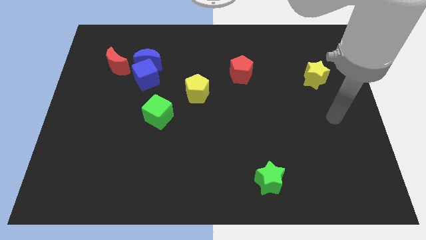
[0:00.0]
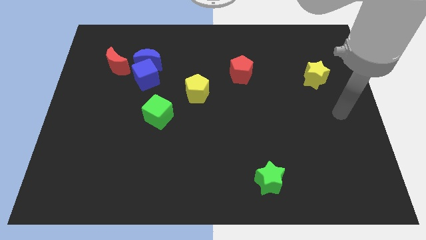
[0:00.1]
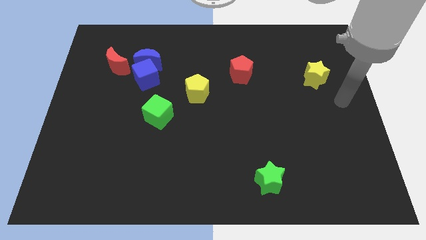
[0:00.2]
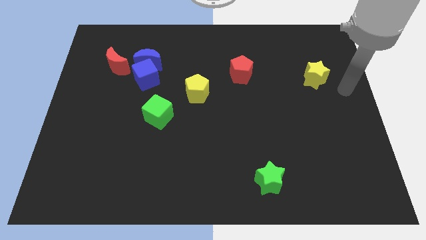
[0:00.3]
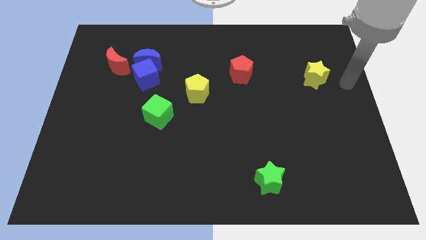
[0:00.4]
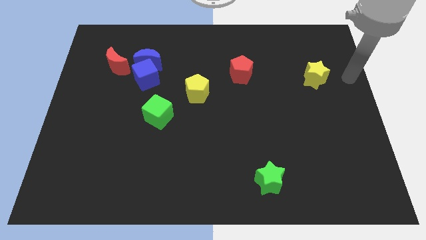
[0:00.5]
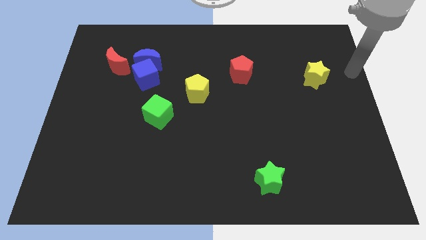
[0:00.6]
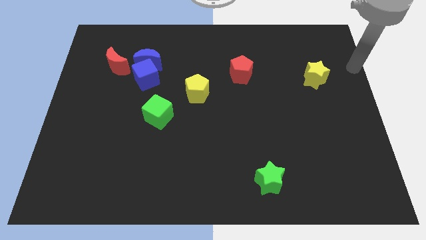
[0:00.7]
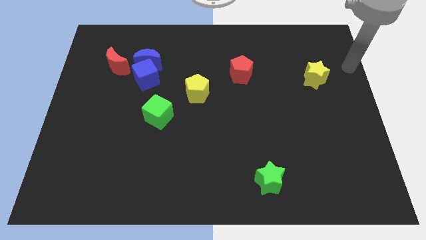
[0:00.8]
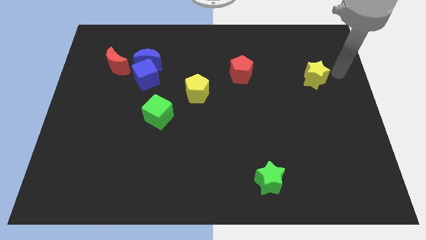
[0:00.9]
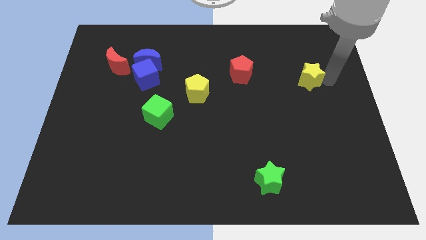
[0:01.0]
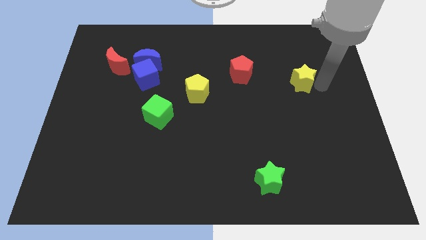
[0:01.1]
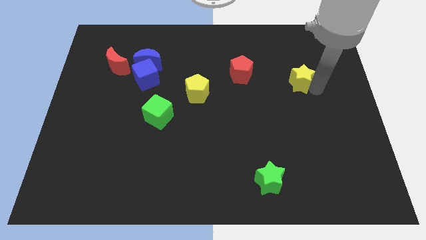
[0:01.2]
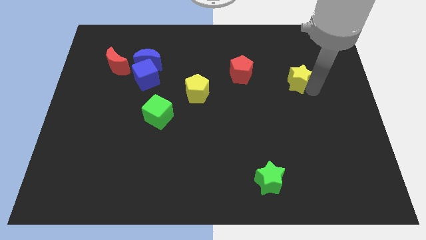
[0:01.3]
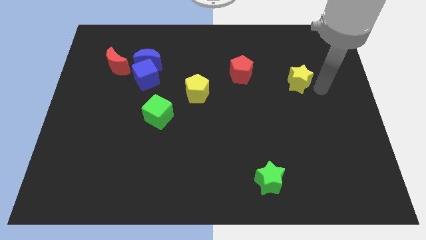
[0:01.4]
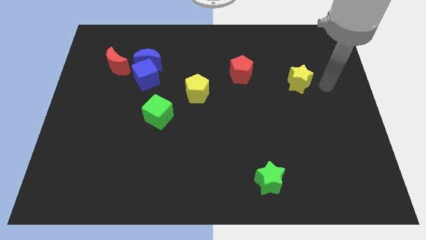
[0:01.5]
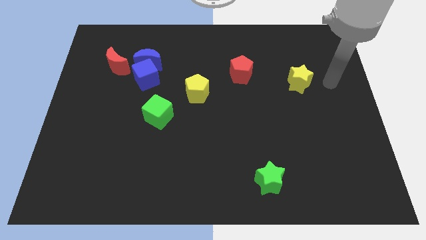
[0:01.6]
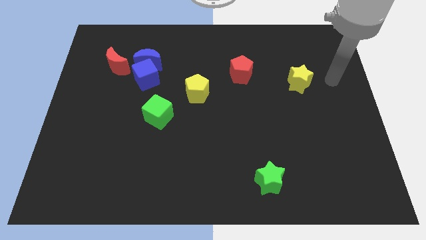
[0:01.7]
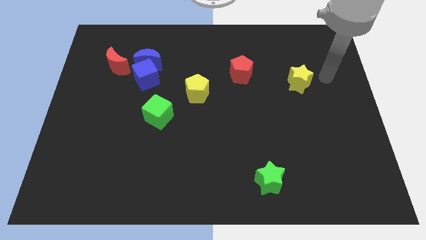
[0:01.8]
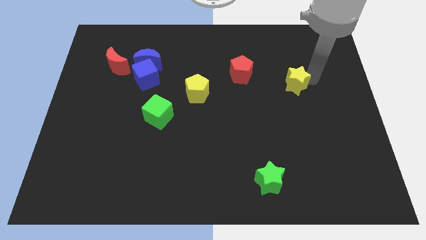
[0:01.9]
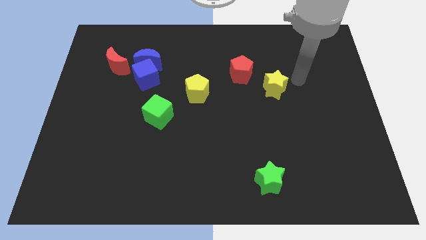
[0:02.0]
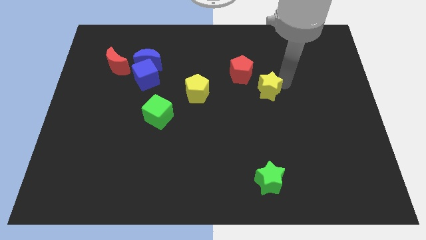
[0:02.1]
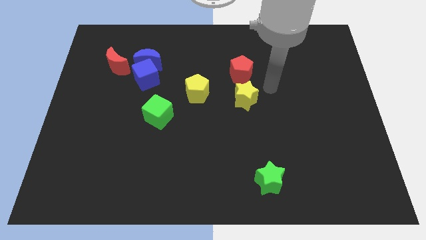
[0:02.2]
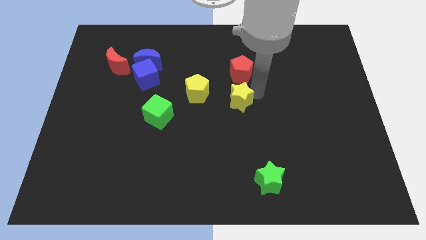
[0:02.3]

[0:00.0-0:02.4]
push the yellow star to the bottom of the red pentagon

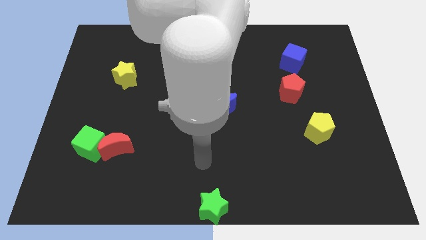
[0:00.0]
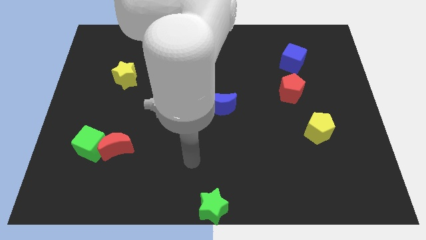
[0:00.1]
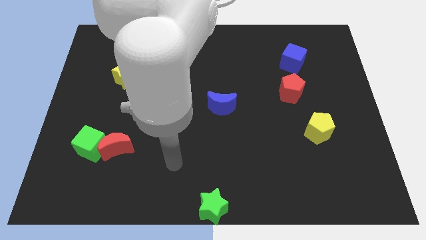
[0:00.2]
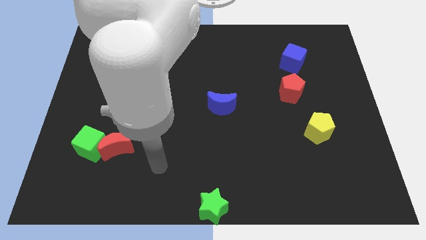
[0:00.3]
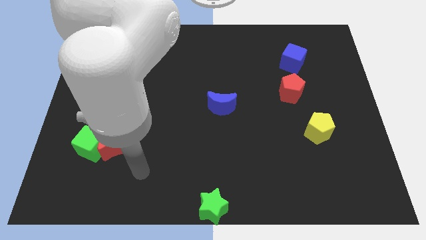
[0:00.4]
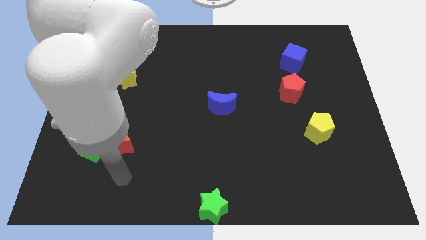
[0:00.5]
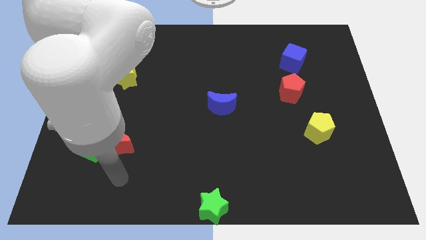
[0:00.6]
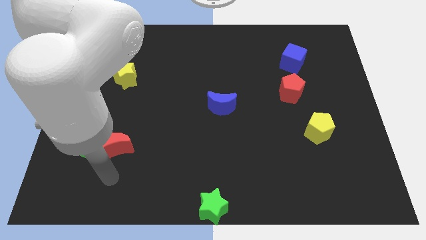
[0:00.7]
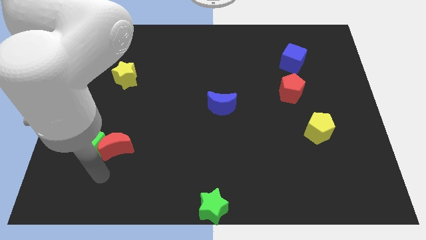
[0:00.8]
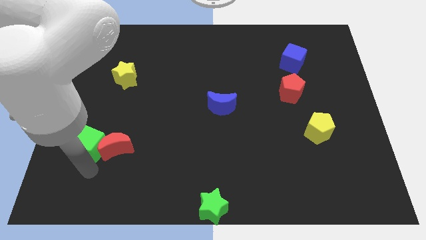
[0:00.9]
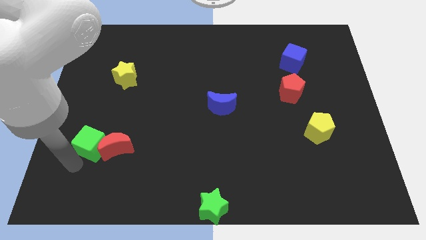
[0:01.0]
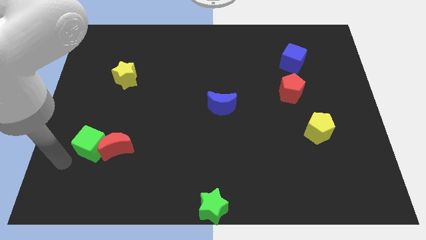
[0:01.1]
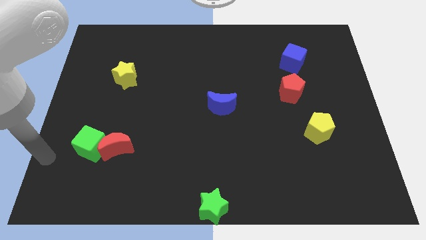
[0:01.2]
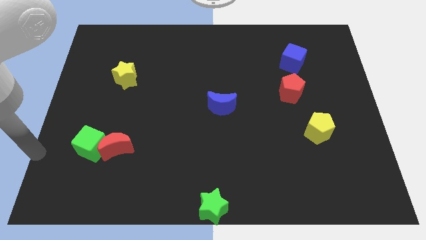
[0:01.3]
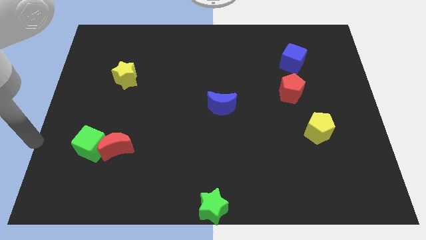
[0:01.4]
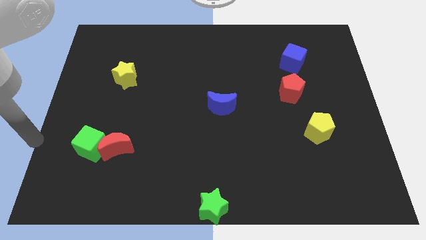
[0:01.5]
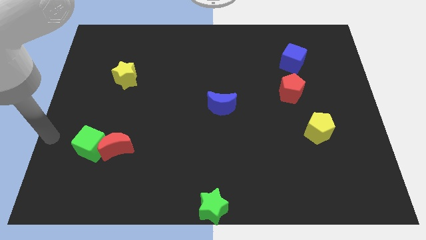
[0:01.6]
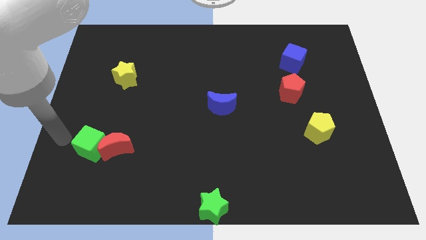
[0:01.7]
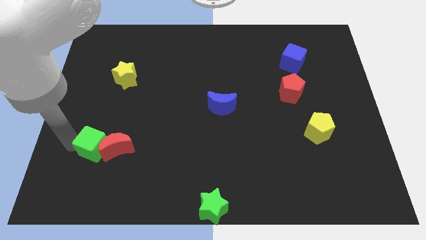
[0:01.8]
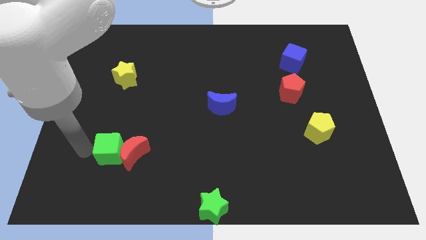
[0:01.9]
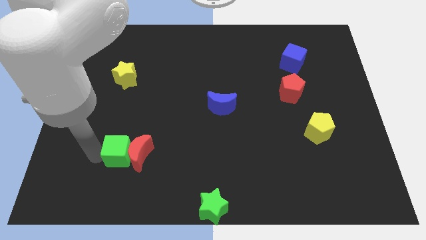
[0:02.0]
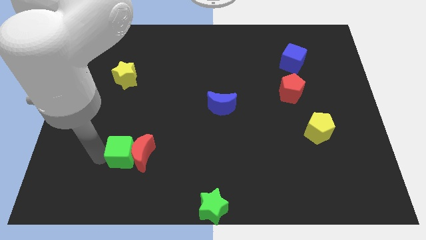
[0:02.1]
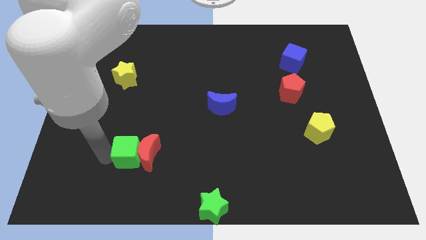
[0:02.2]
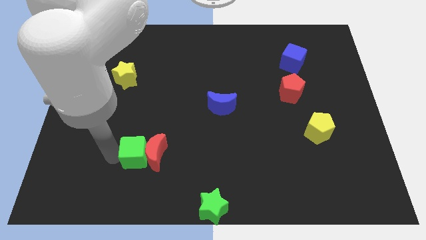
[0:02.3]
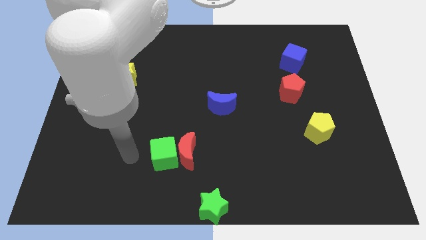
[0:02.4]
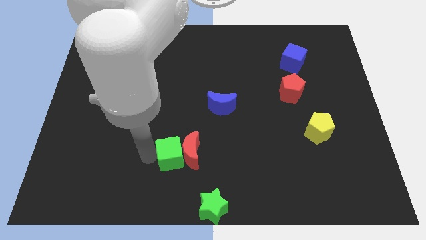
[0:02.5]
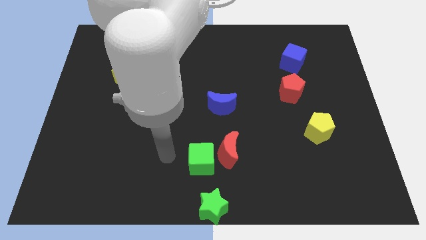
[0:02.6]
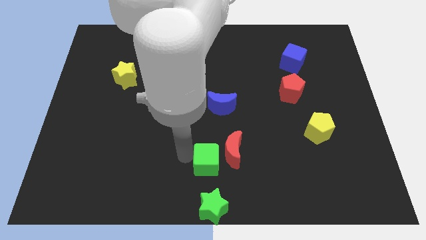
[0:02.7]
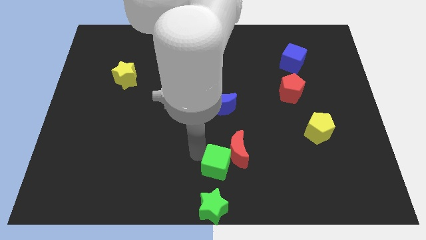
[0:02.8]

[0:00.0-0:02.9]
place green cube to the top of green star

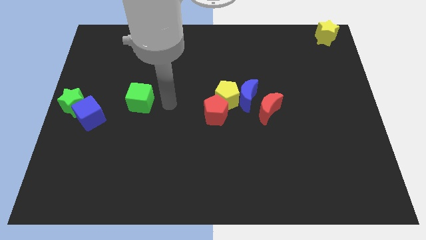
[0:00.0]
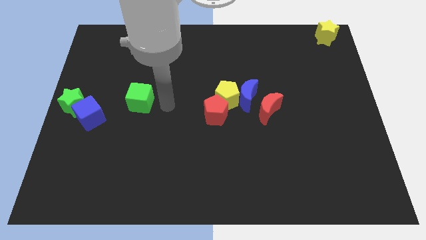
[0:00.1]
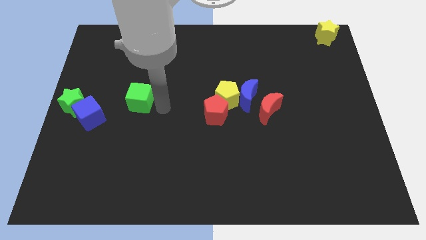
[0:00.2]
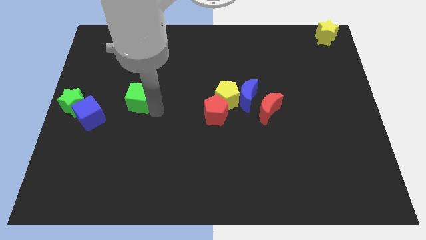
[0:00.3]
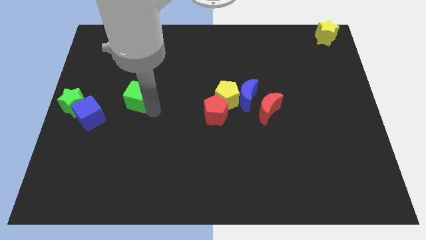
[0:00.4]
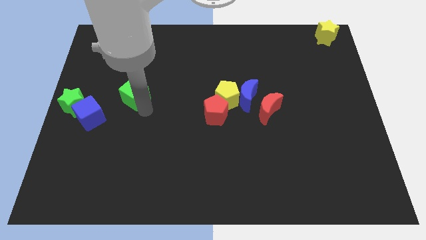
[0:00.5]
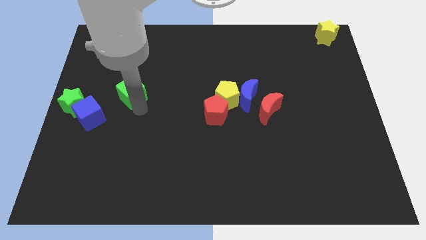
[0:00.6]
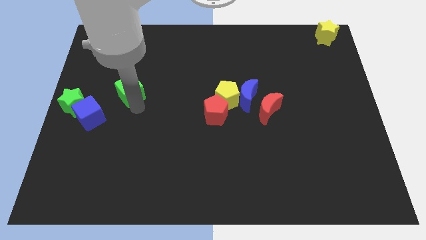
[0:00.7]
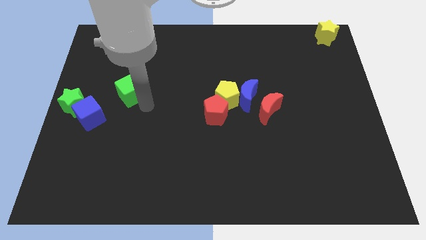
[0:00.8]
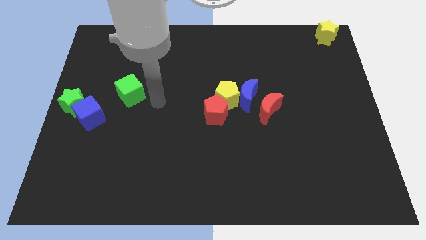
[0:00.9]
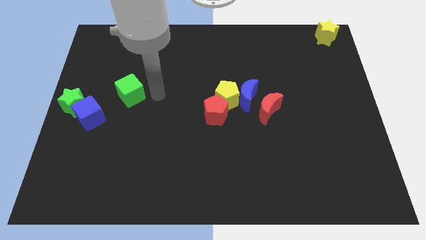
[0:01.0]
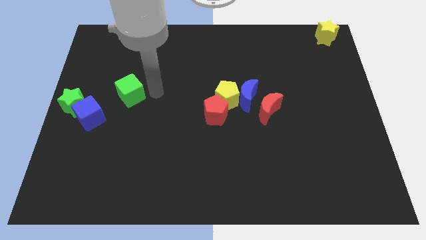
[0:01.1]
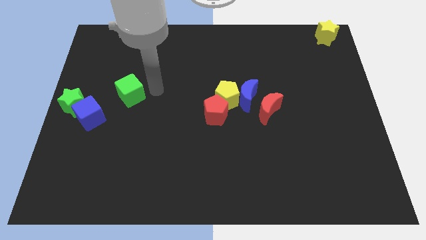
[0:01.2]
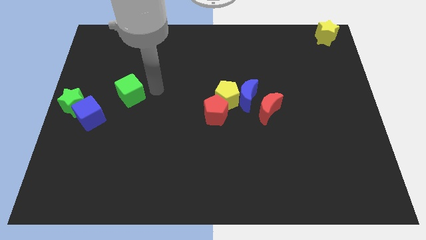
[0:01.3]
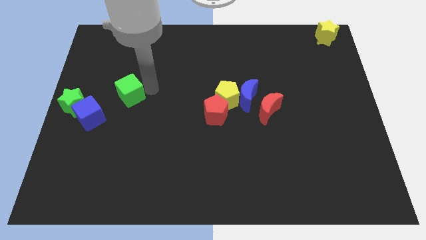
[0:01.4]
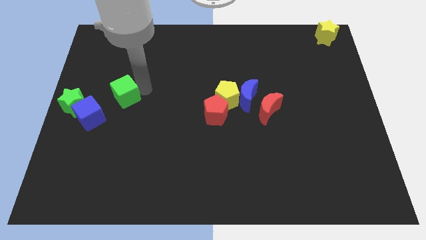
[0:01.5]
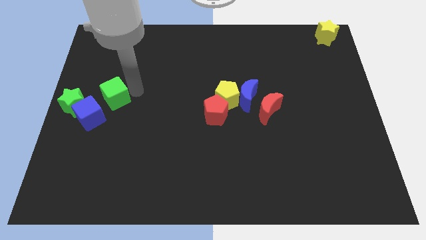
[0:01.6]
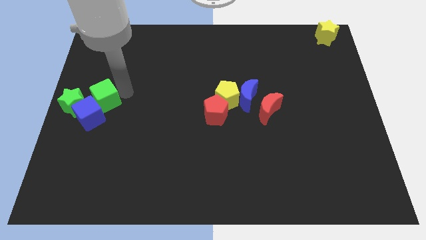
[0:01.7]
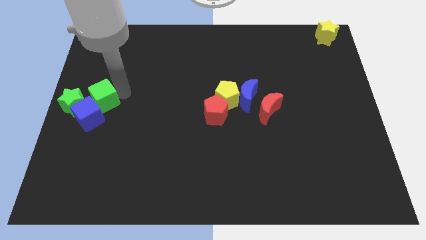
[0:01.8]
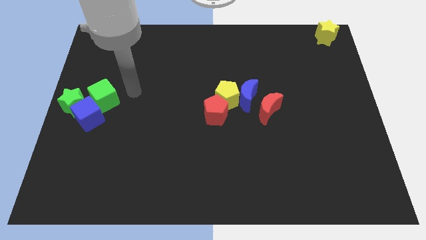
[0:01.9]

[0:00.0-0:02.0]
move the green cube into the top side of the blue cube

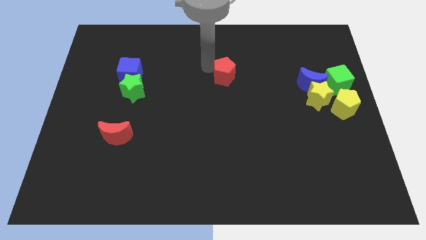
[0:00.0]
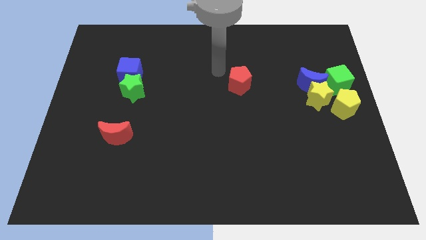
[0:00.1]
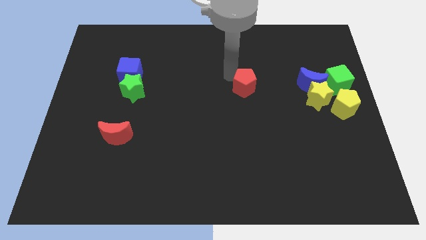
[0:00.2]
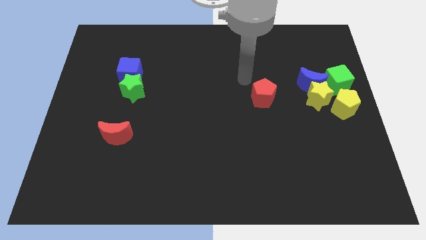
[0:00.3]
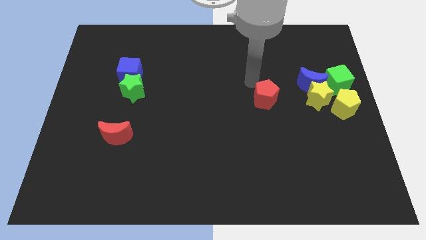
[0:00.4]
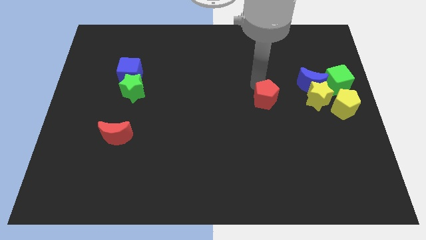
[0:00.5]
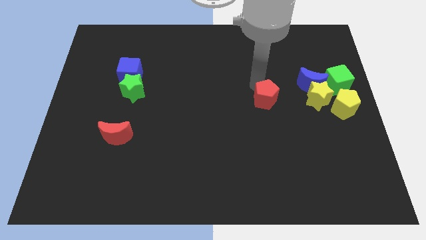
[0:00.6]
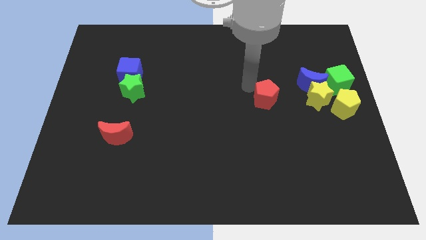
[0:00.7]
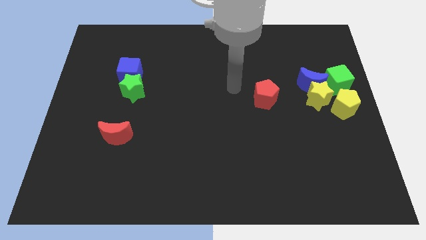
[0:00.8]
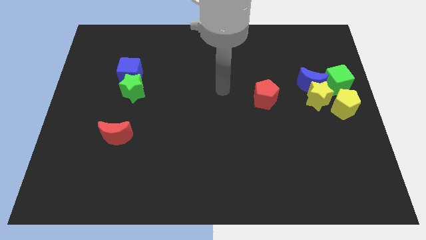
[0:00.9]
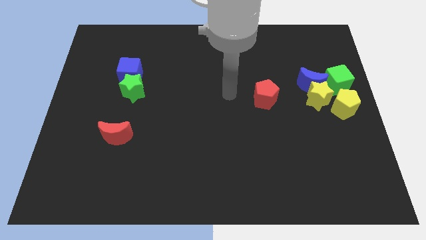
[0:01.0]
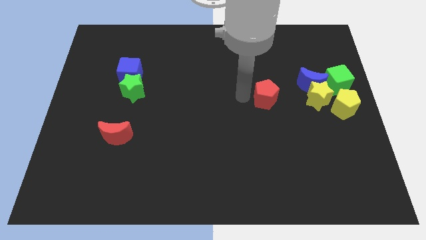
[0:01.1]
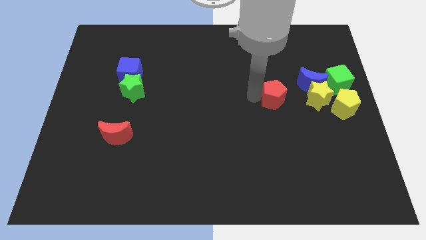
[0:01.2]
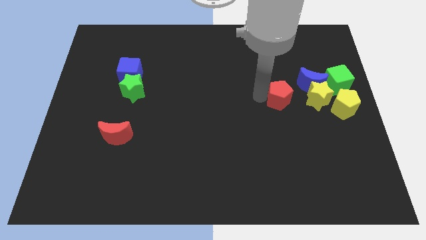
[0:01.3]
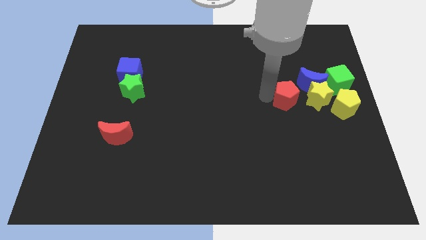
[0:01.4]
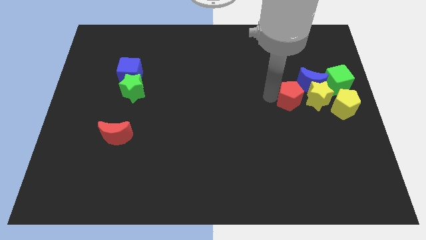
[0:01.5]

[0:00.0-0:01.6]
move the red pentagon towards the yellow star
